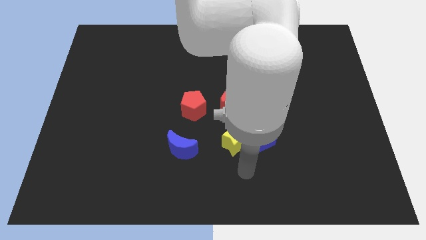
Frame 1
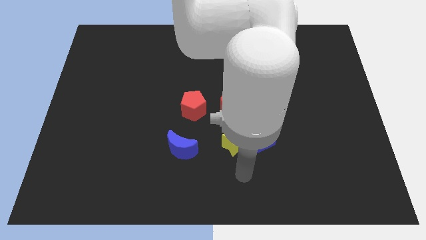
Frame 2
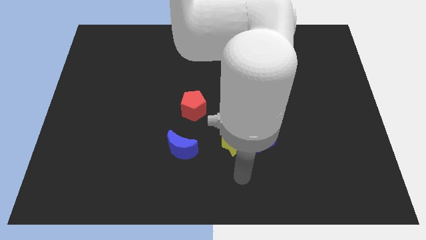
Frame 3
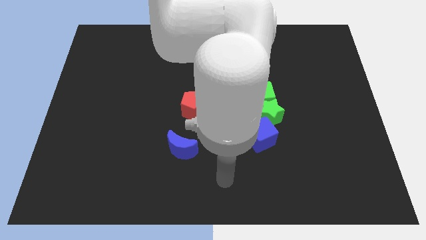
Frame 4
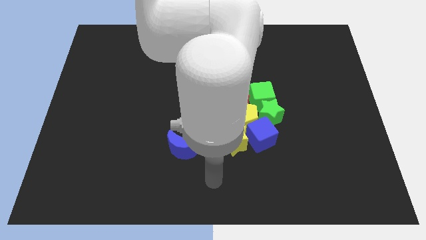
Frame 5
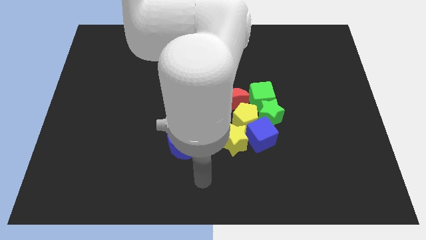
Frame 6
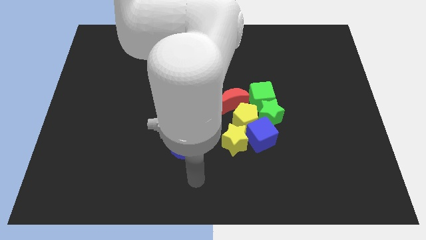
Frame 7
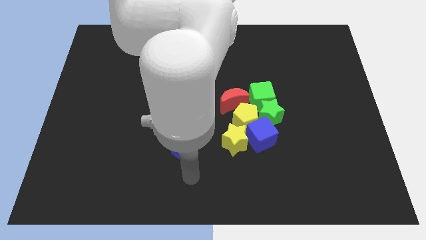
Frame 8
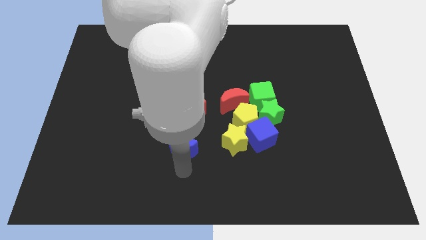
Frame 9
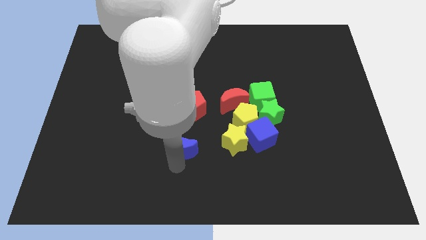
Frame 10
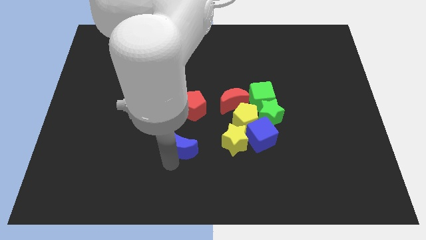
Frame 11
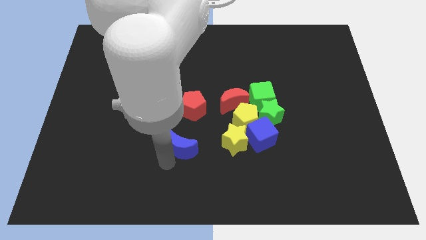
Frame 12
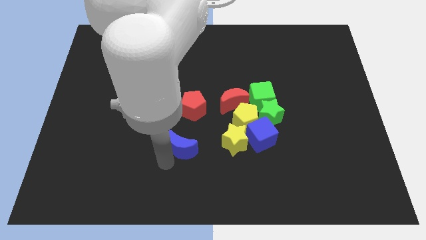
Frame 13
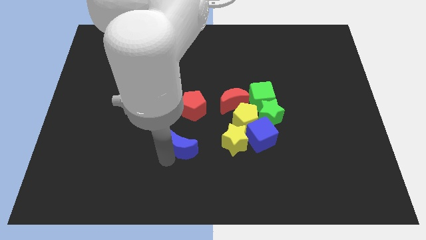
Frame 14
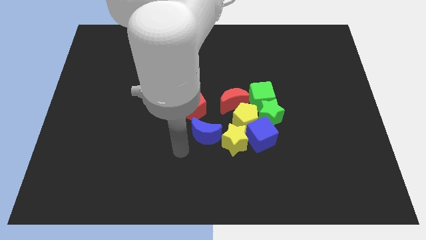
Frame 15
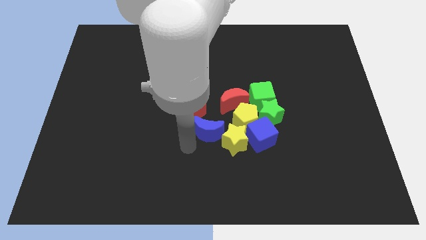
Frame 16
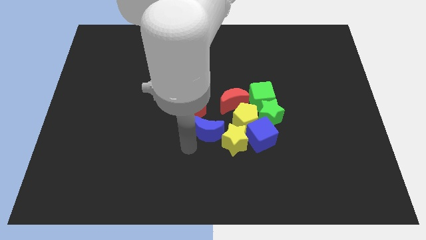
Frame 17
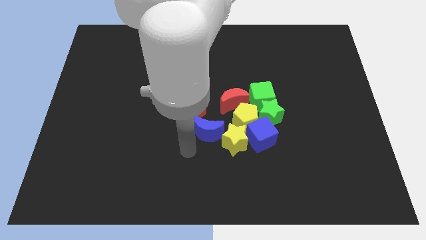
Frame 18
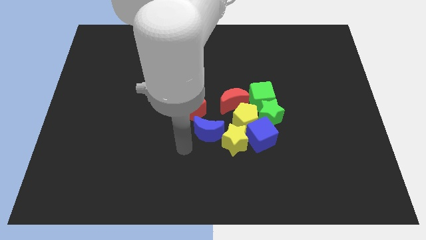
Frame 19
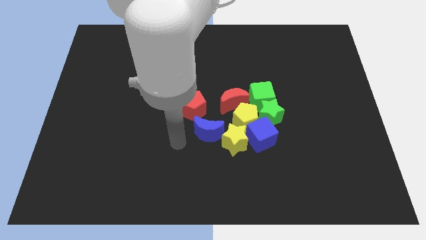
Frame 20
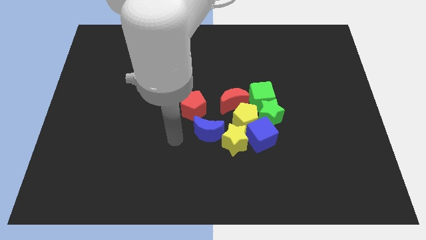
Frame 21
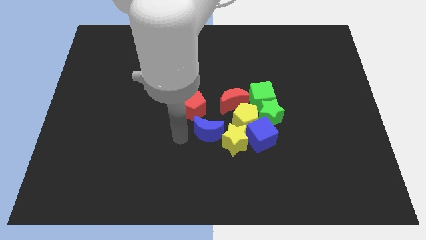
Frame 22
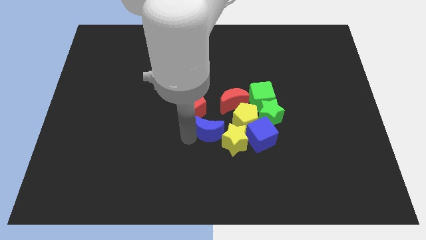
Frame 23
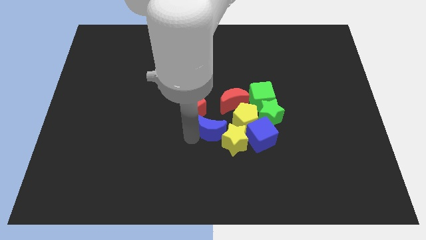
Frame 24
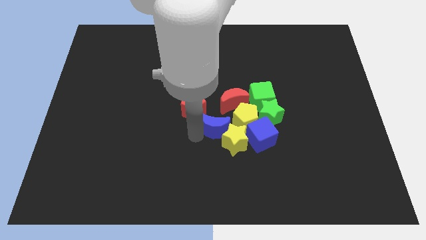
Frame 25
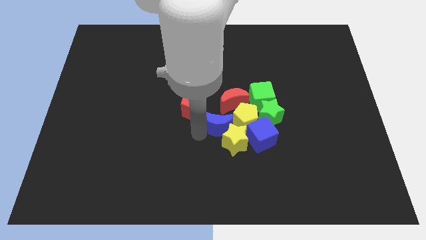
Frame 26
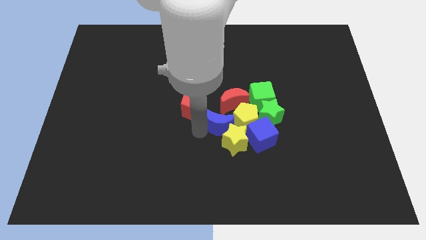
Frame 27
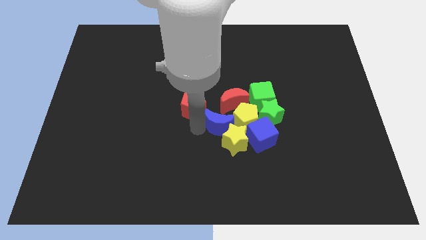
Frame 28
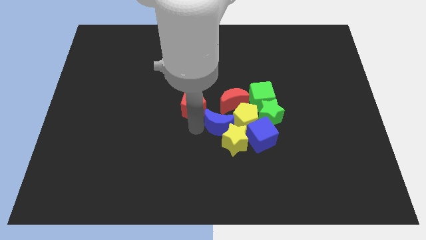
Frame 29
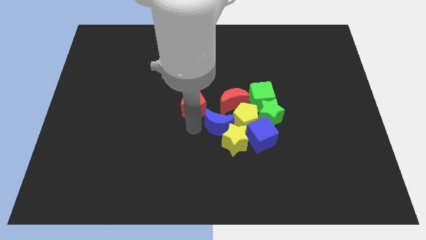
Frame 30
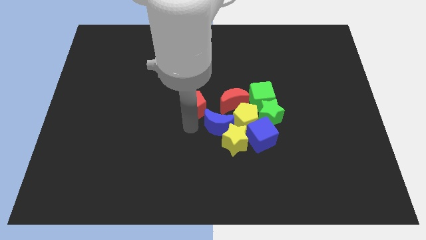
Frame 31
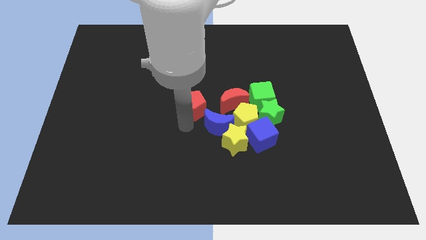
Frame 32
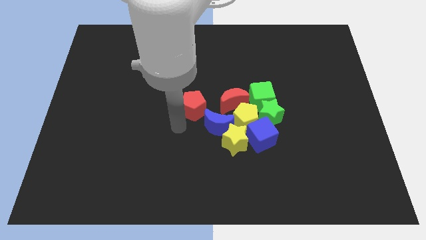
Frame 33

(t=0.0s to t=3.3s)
slide the blue moon towards the center of the board

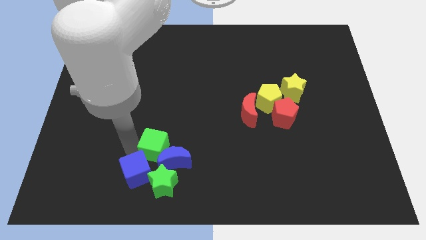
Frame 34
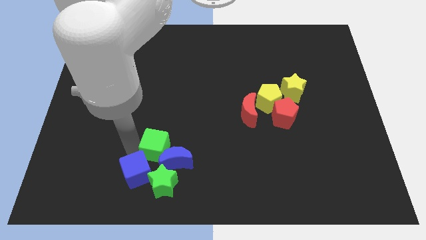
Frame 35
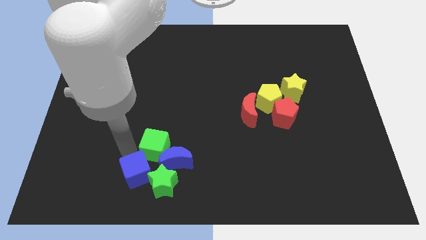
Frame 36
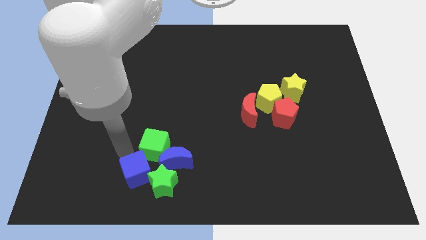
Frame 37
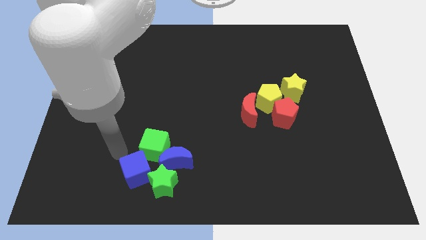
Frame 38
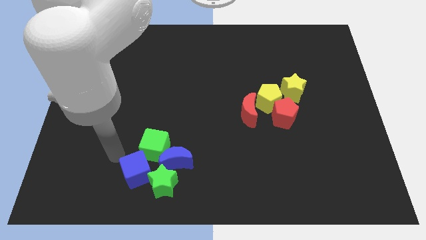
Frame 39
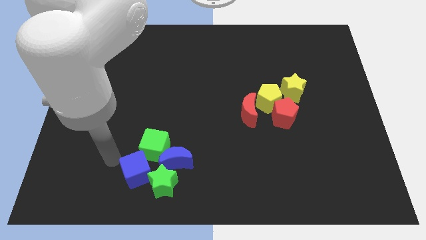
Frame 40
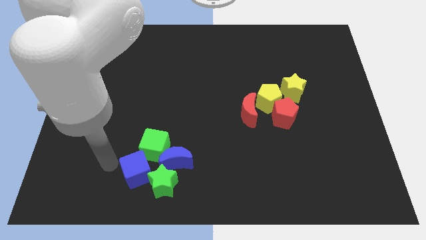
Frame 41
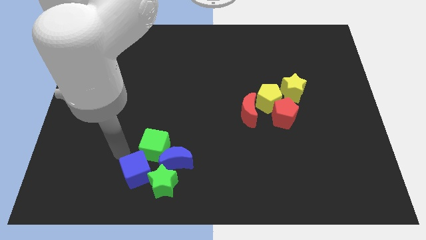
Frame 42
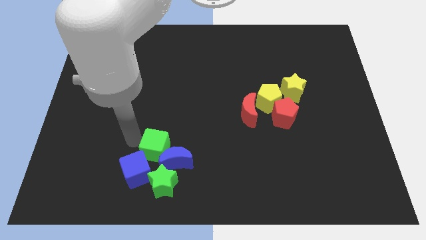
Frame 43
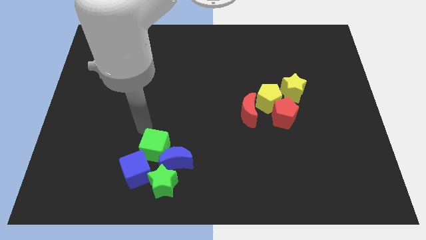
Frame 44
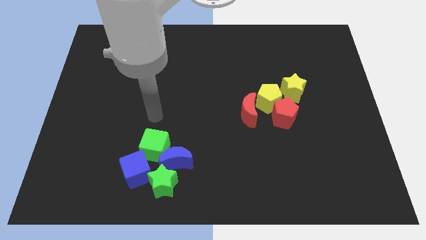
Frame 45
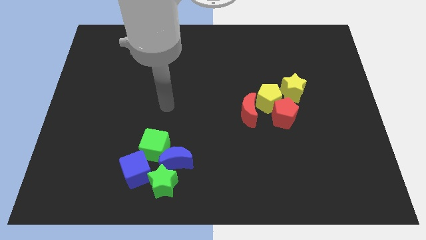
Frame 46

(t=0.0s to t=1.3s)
adjust the green cube into the blue crescent and blue cube from the top

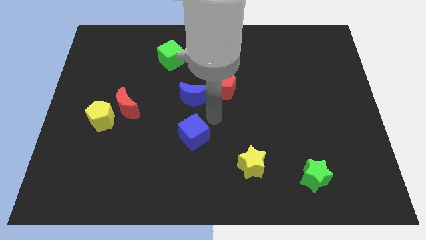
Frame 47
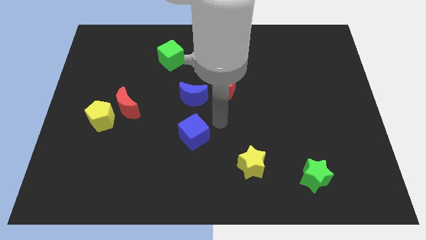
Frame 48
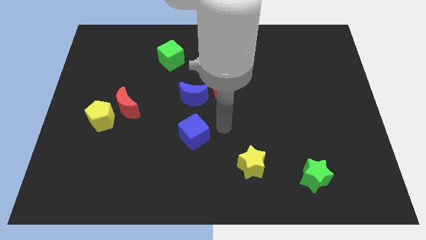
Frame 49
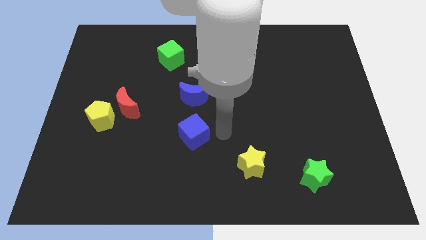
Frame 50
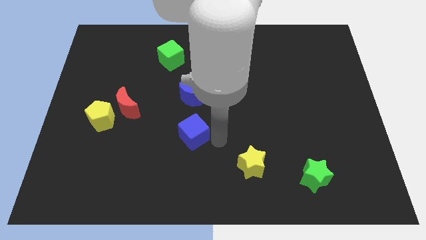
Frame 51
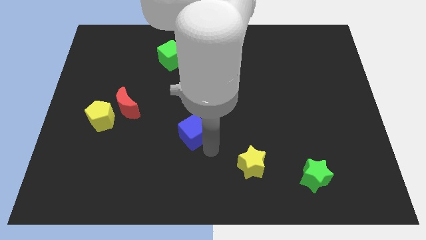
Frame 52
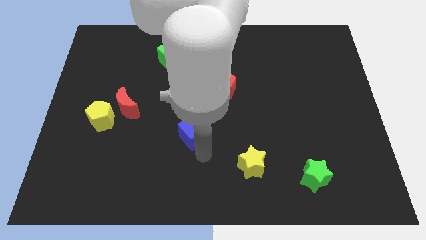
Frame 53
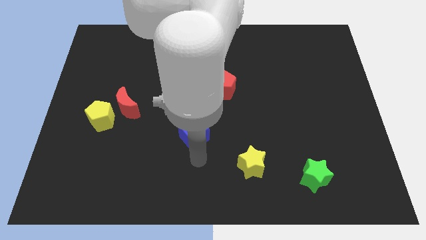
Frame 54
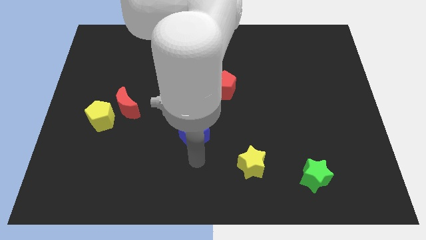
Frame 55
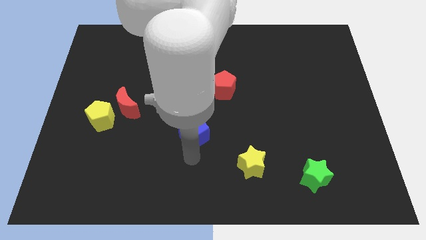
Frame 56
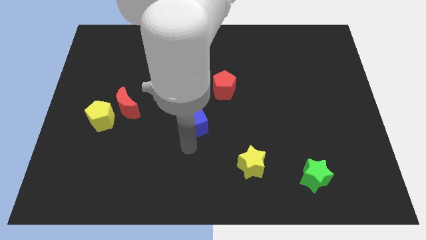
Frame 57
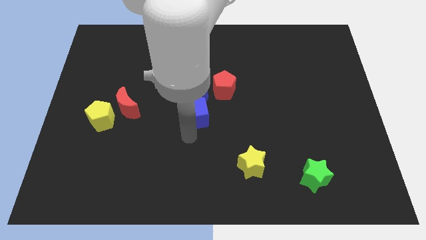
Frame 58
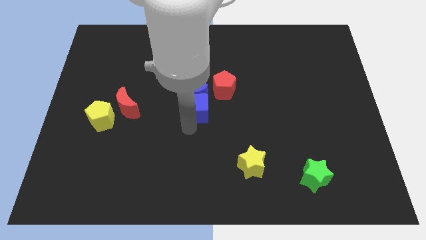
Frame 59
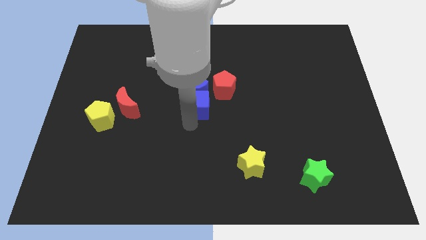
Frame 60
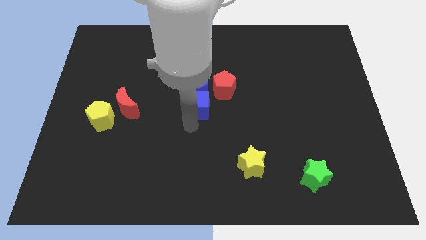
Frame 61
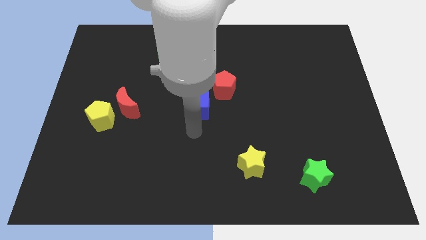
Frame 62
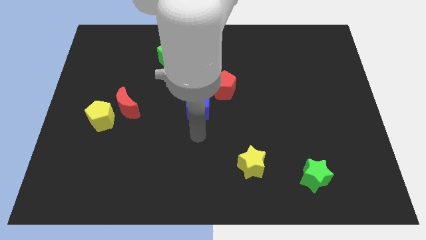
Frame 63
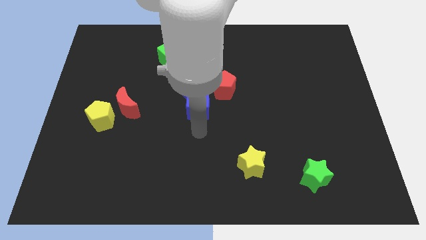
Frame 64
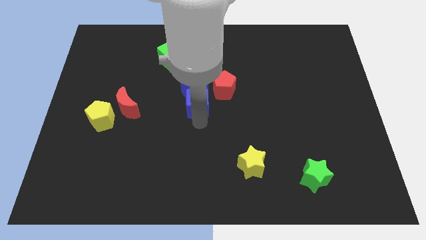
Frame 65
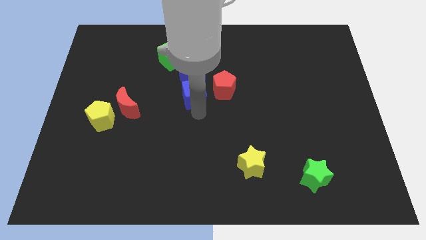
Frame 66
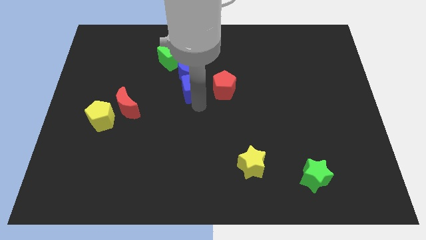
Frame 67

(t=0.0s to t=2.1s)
push the blue blocks upwards of the board

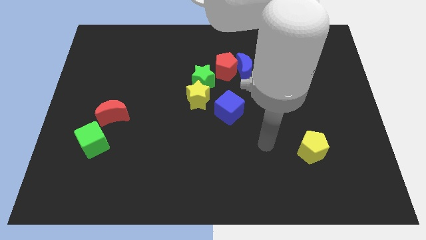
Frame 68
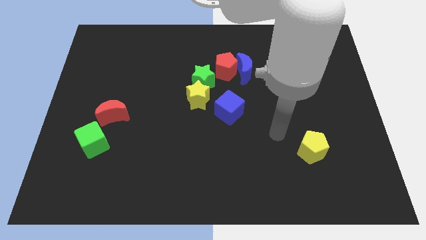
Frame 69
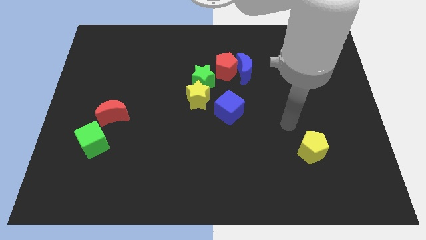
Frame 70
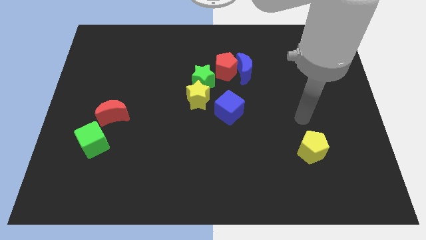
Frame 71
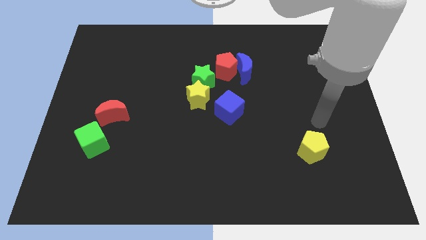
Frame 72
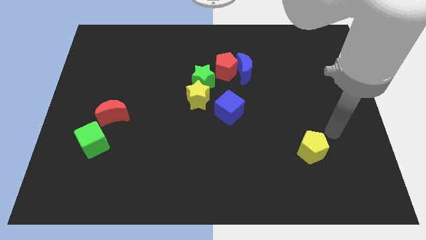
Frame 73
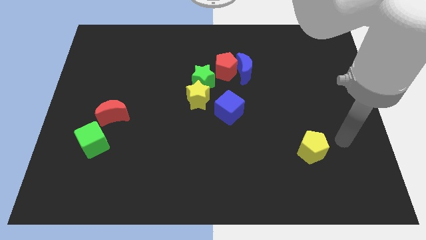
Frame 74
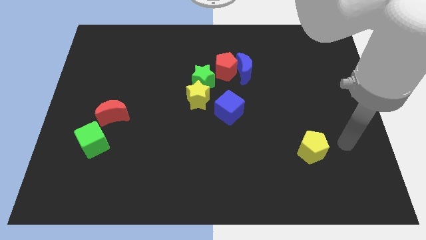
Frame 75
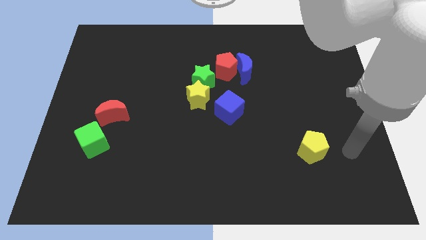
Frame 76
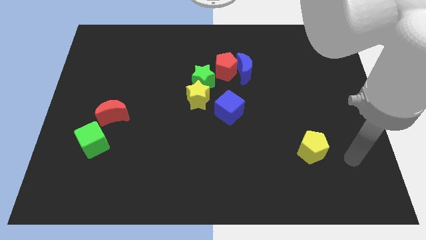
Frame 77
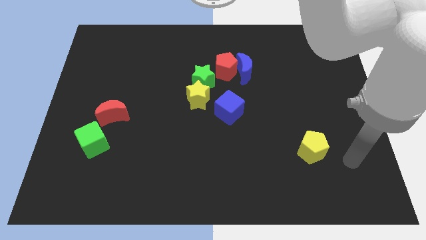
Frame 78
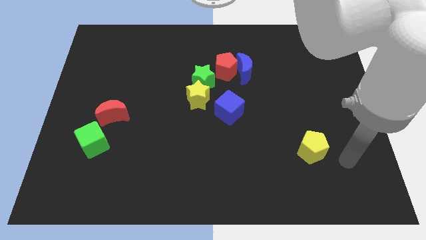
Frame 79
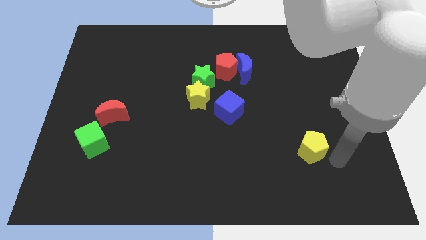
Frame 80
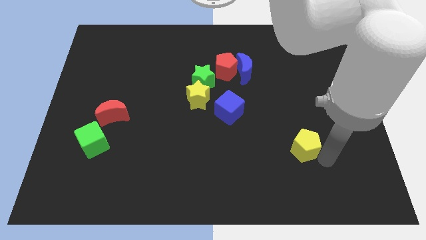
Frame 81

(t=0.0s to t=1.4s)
slightly move the yellow pentagon towards the blue cube

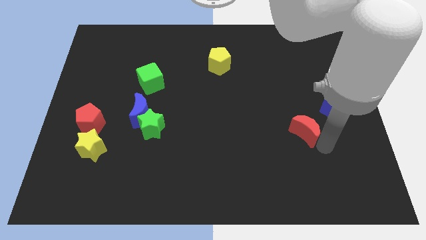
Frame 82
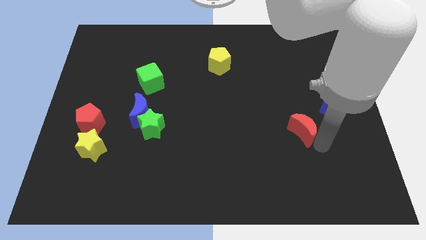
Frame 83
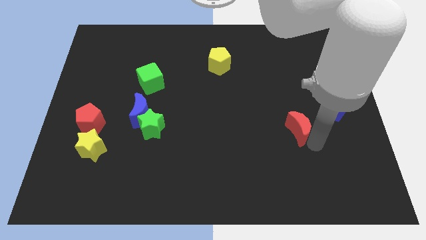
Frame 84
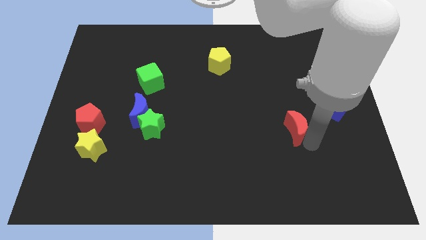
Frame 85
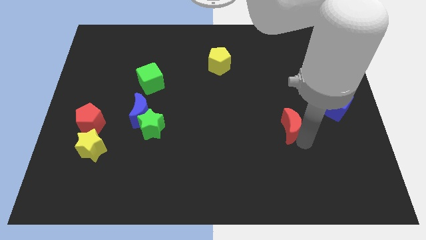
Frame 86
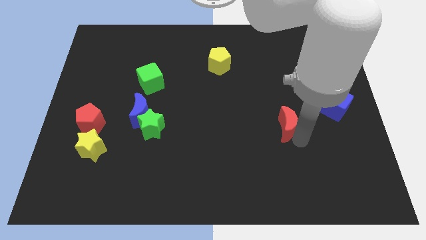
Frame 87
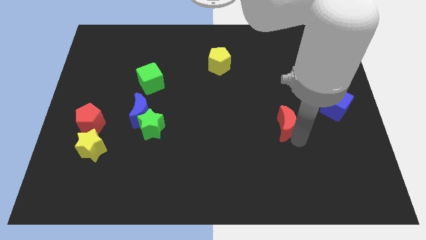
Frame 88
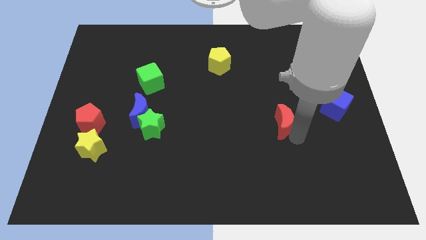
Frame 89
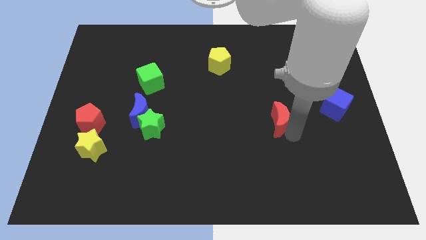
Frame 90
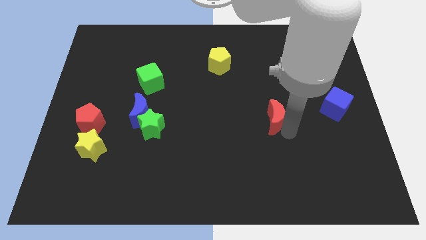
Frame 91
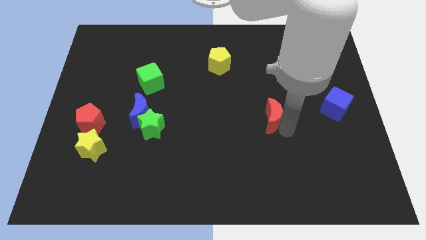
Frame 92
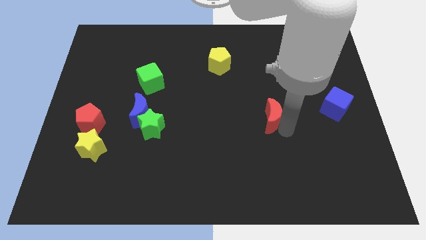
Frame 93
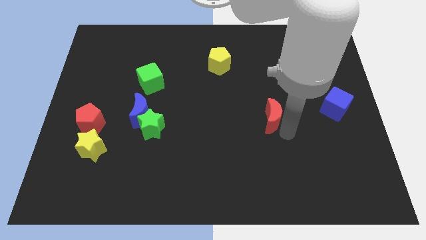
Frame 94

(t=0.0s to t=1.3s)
place the red crescent horizontally to the right side of the blue crescent
